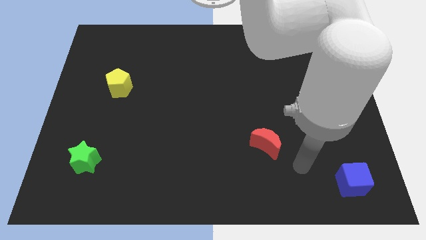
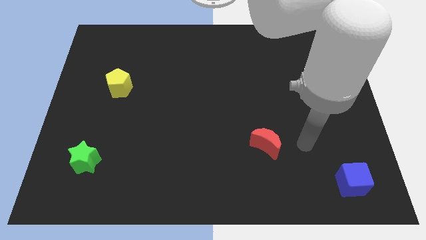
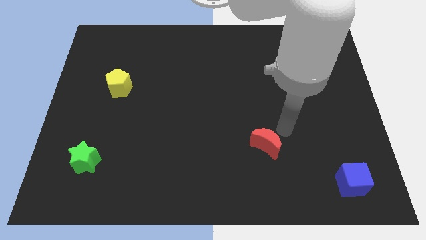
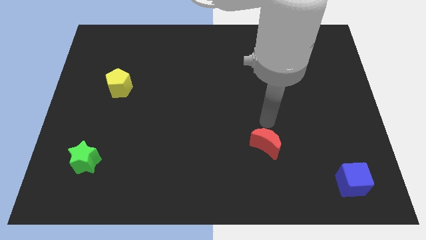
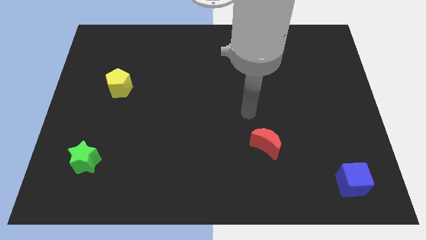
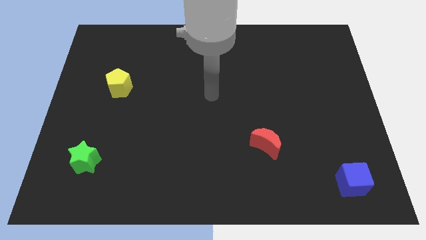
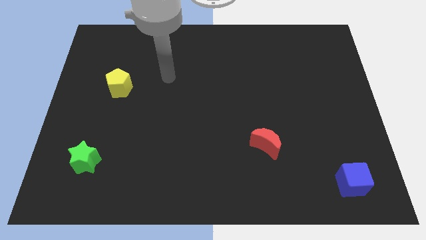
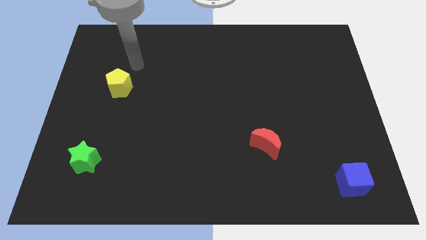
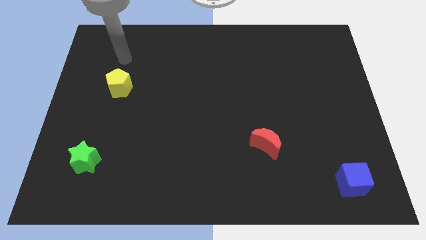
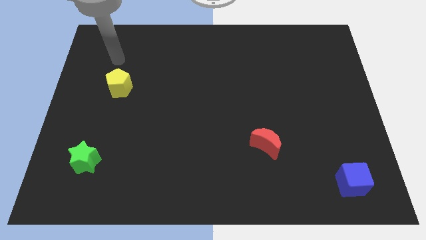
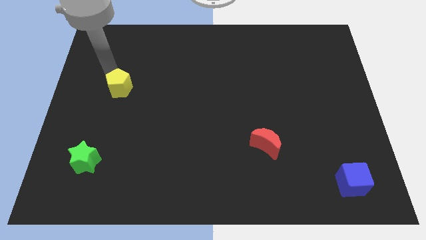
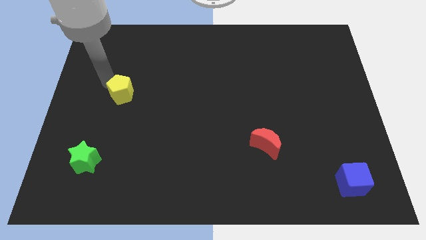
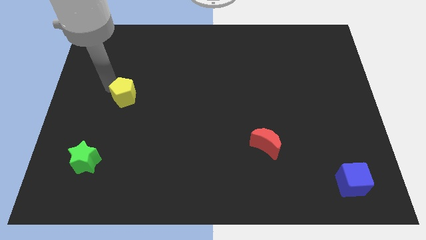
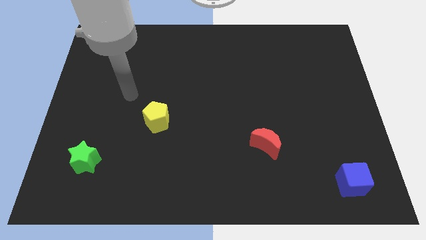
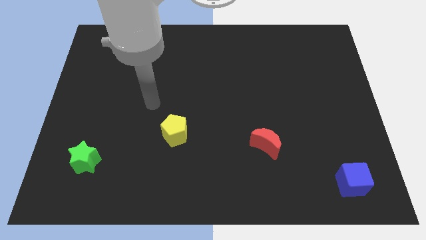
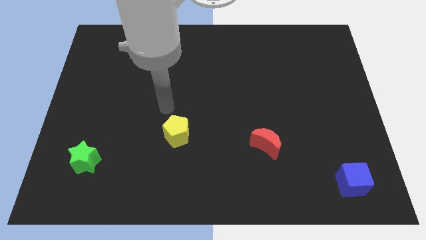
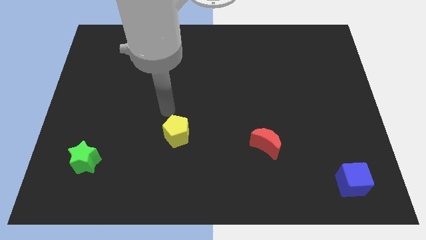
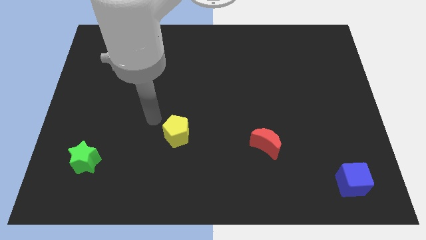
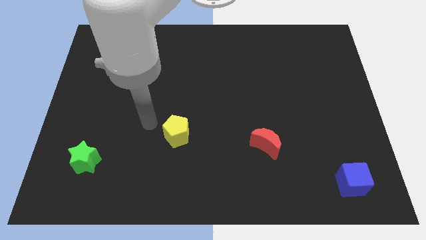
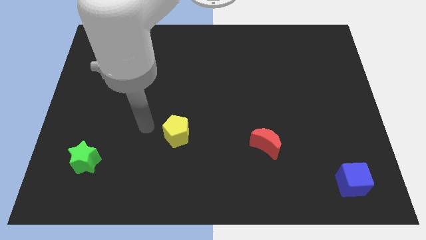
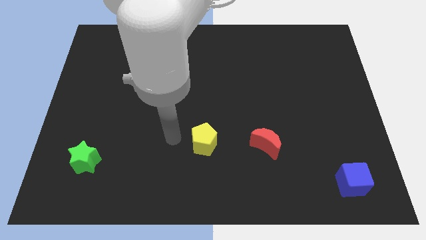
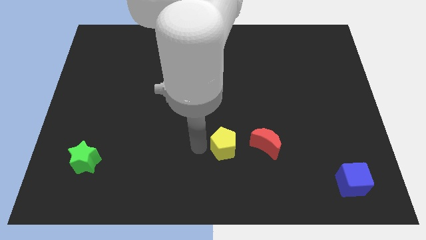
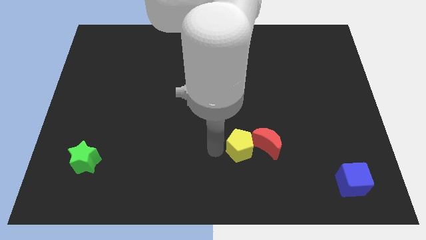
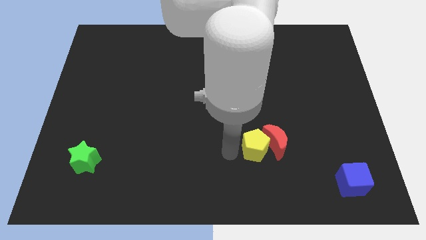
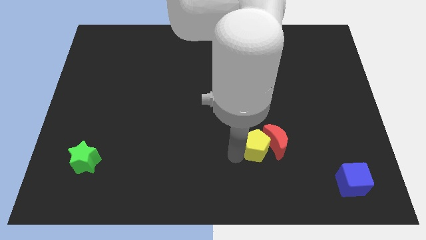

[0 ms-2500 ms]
put the pentagon to the red moon

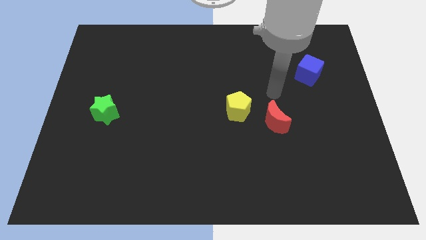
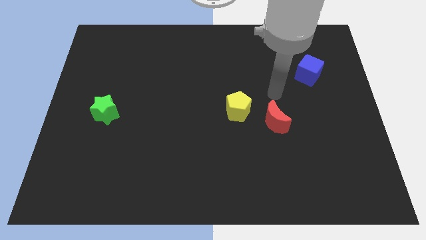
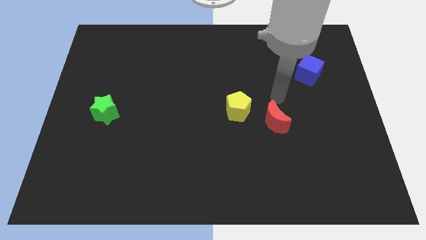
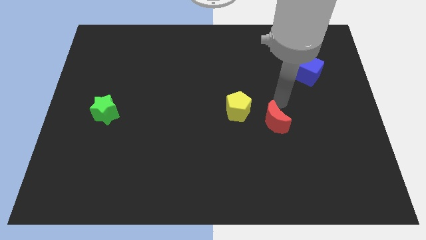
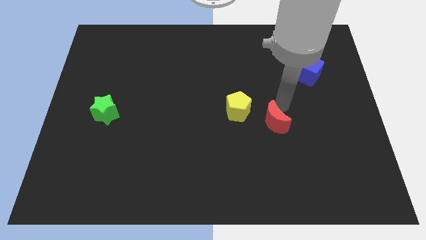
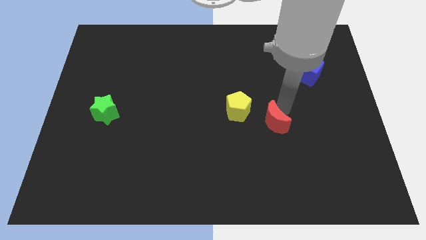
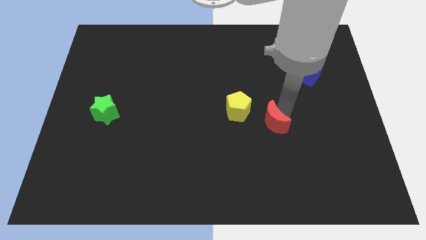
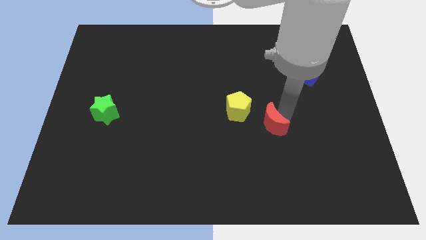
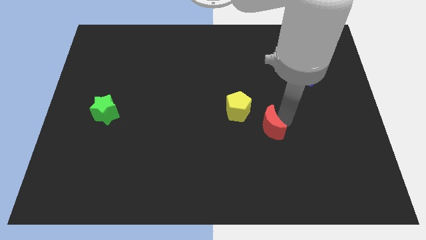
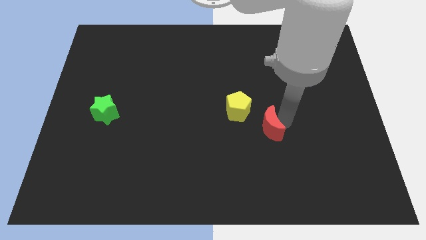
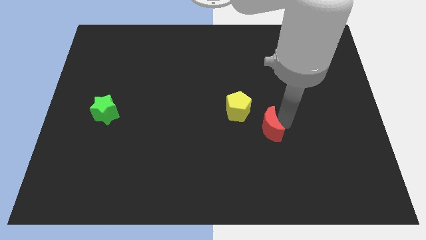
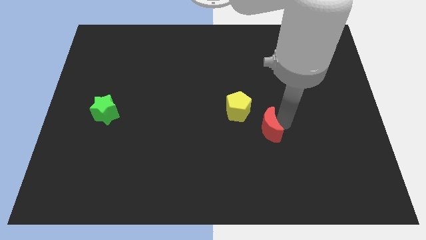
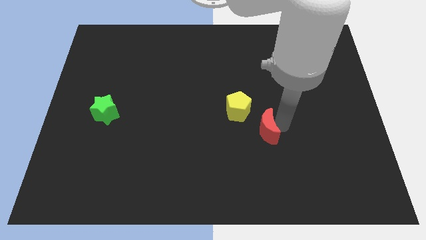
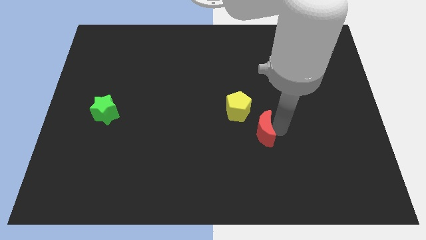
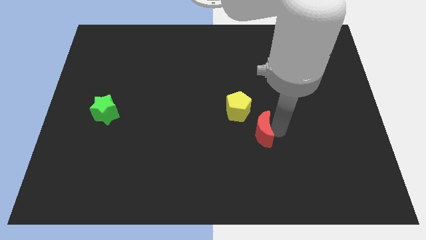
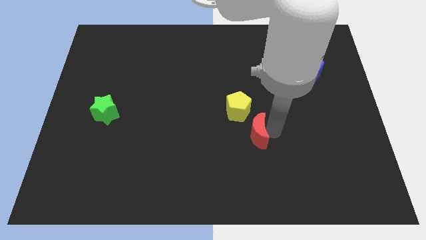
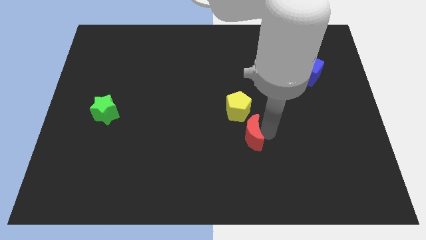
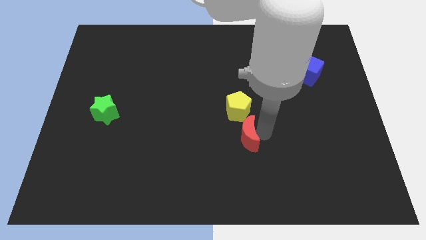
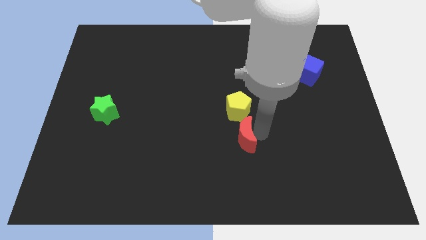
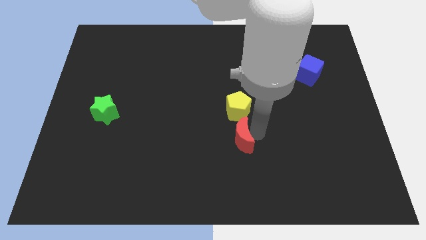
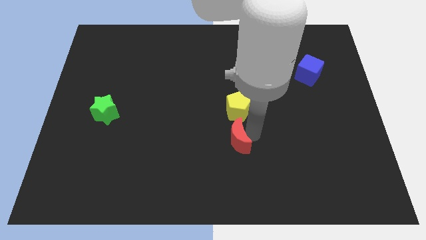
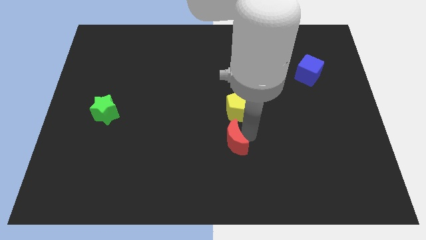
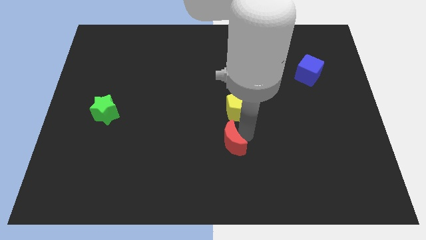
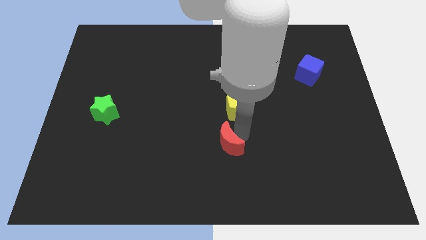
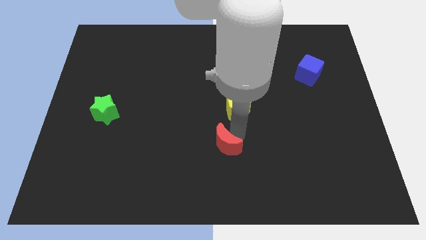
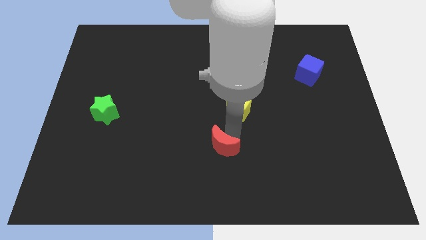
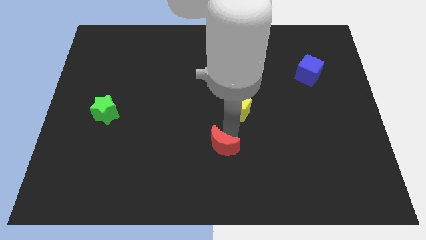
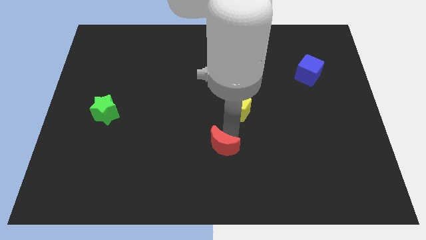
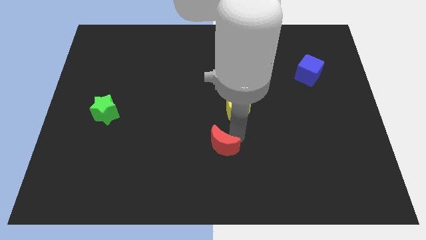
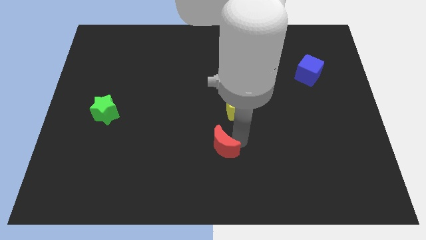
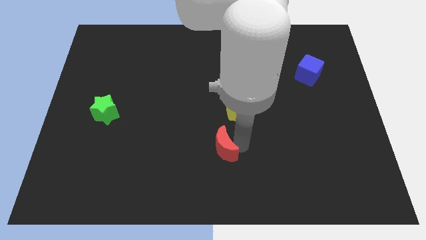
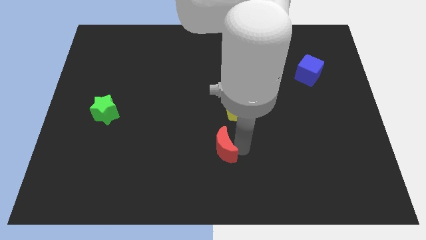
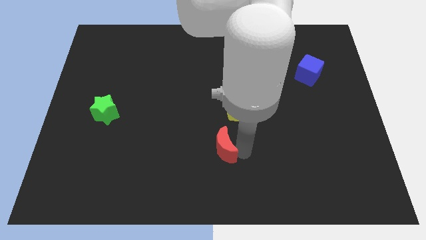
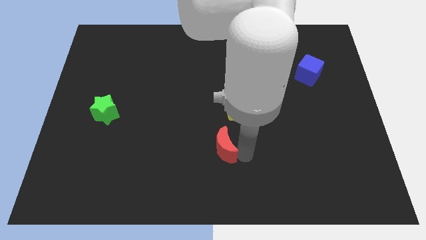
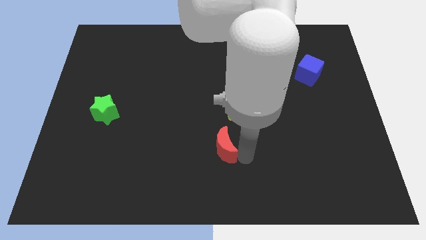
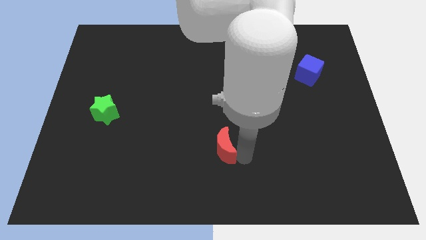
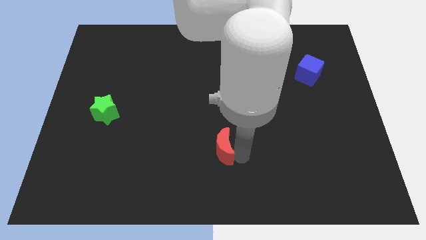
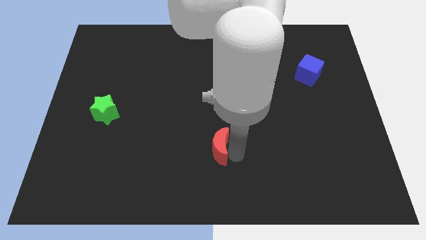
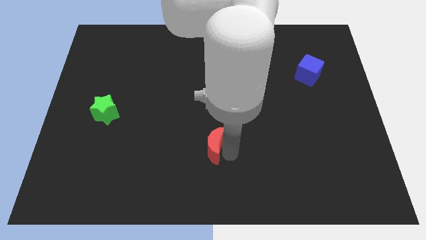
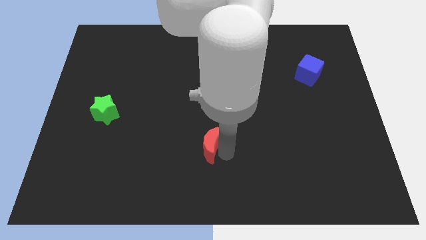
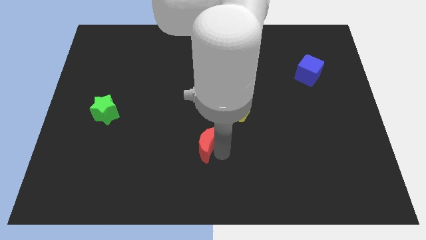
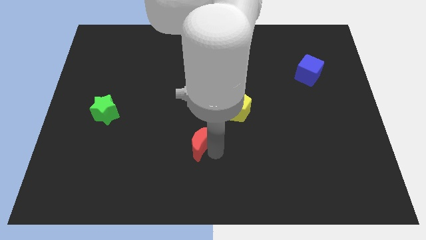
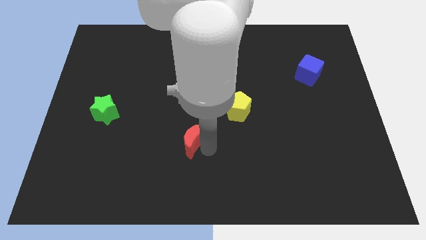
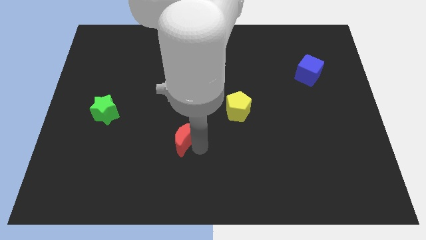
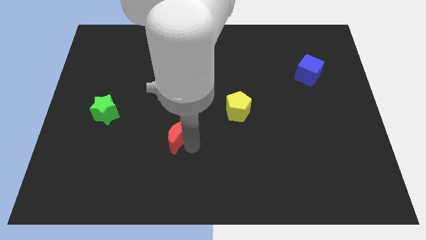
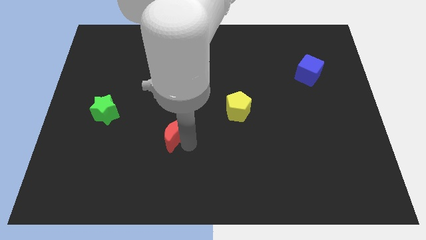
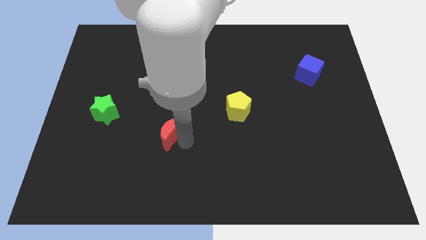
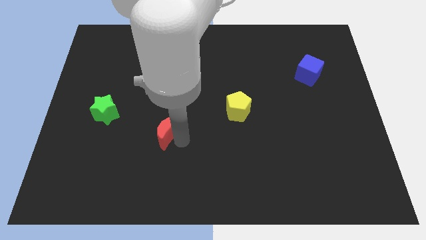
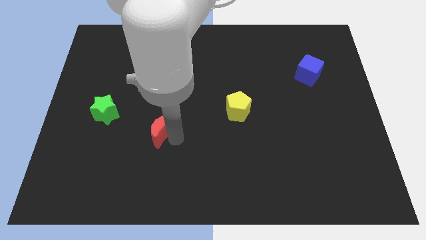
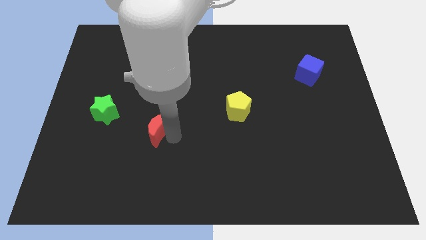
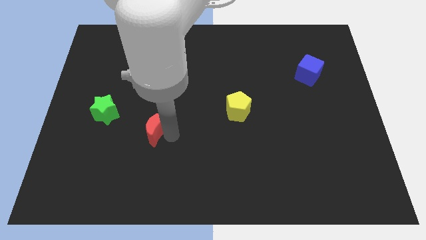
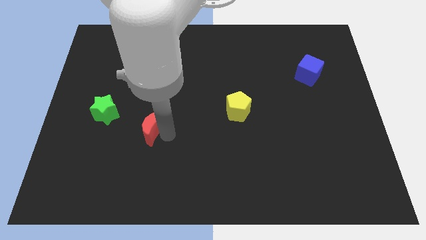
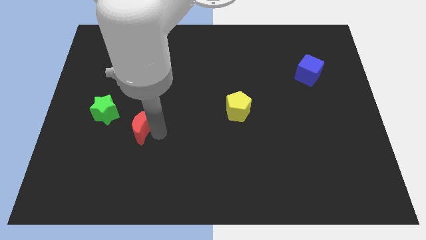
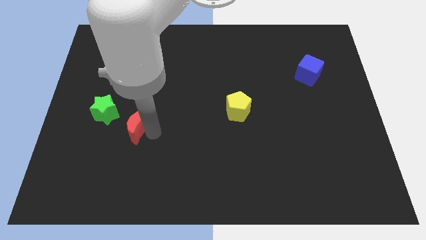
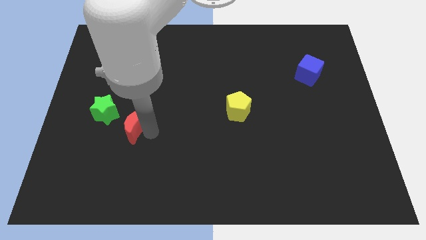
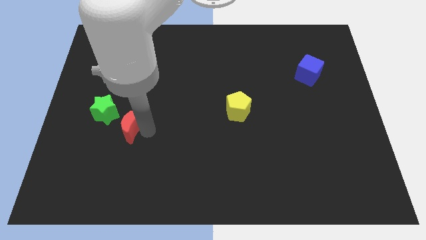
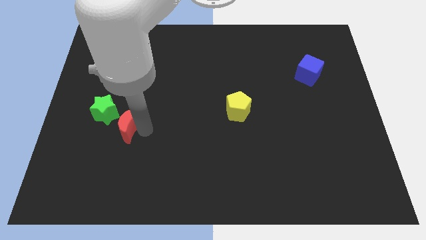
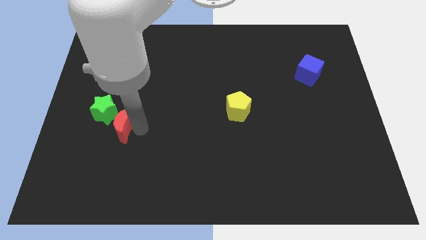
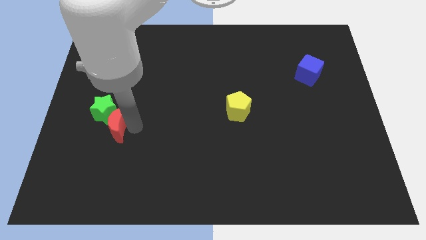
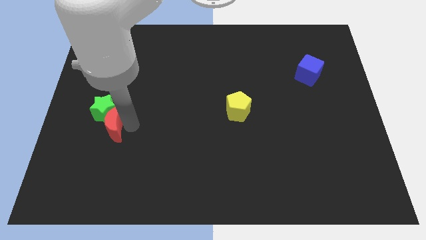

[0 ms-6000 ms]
slide the red moon towards the green star

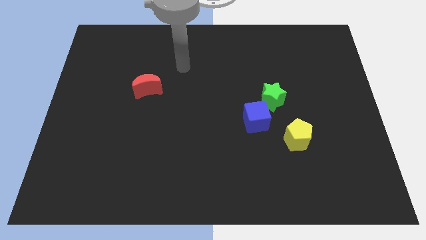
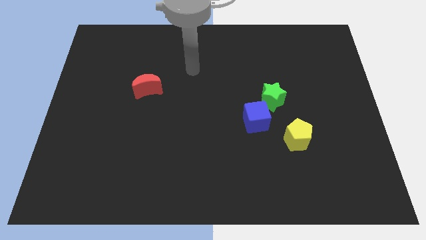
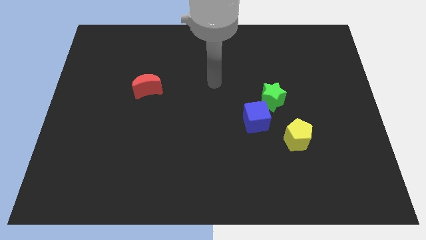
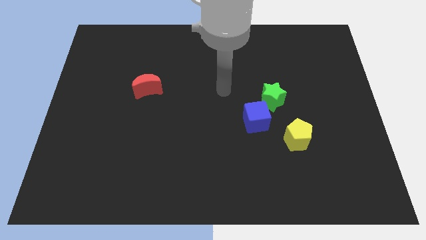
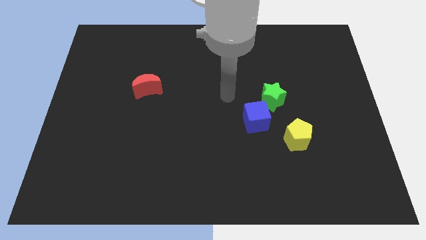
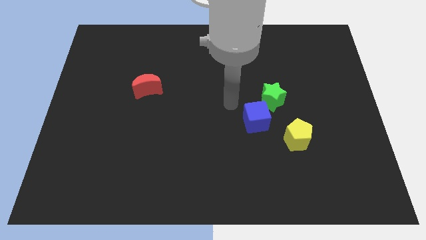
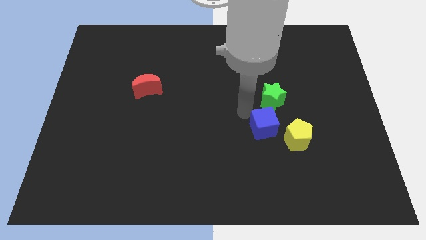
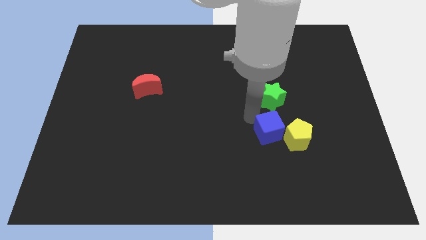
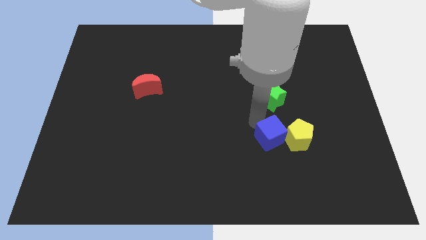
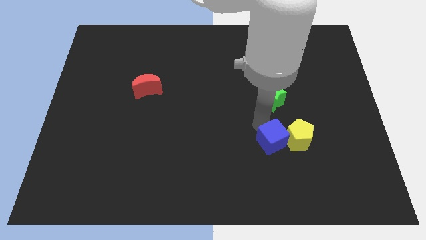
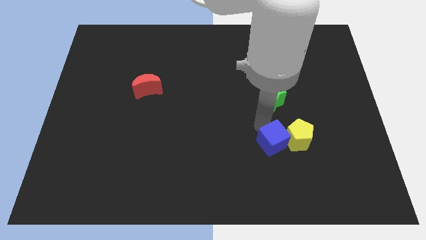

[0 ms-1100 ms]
put the blue cube to the yellow block
